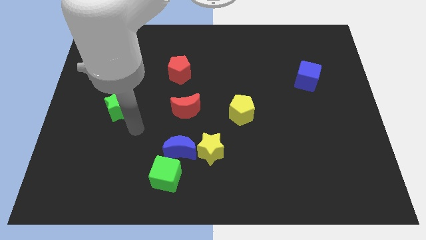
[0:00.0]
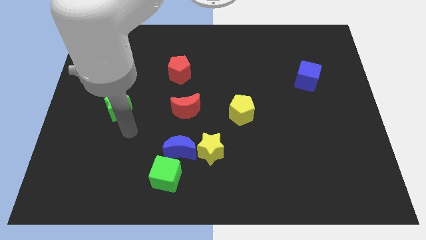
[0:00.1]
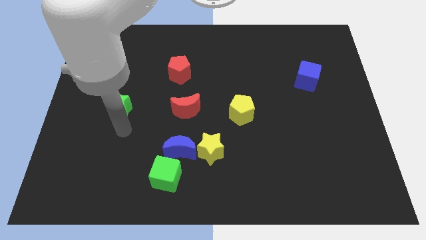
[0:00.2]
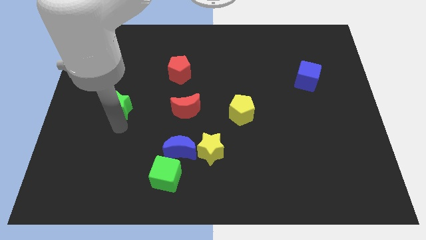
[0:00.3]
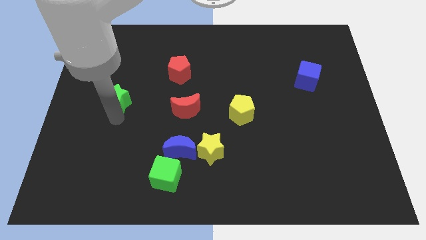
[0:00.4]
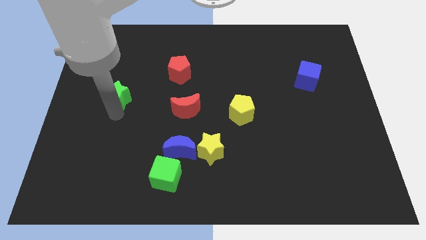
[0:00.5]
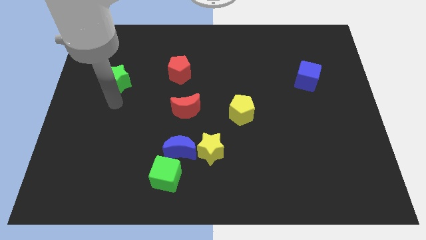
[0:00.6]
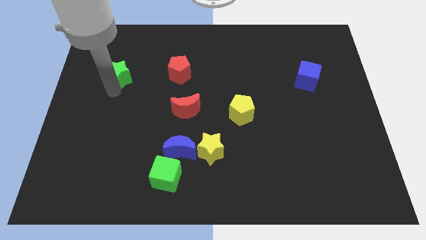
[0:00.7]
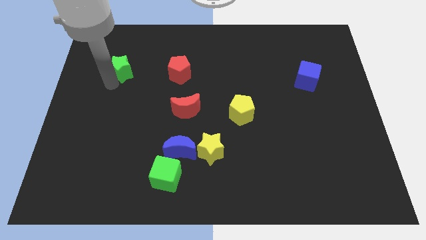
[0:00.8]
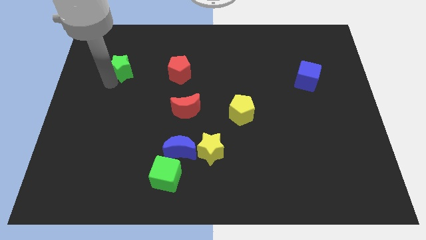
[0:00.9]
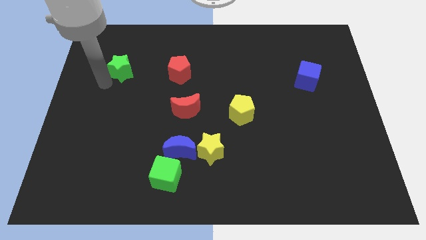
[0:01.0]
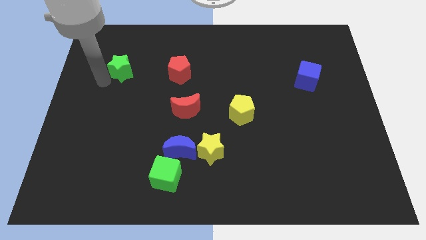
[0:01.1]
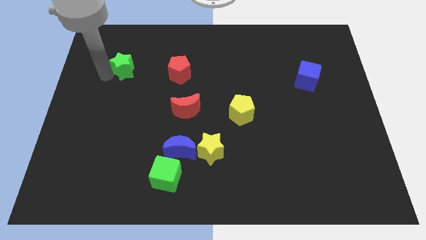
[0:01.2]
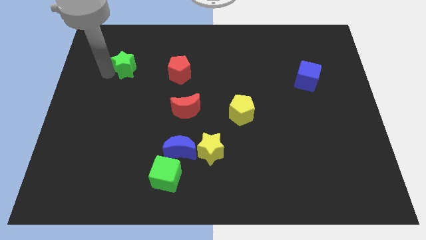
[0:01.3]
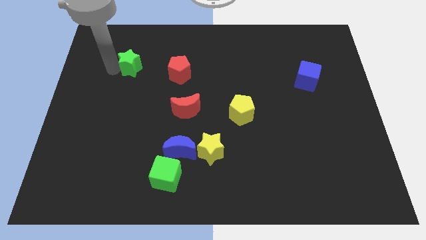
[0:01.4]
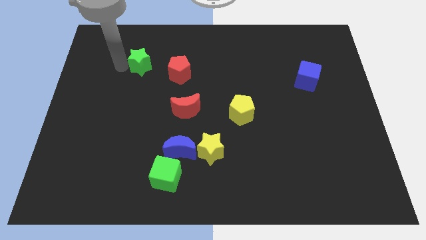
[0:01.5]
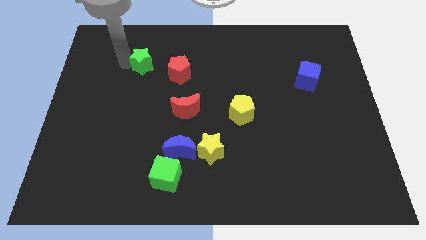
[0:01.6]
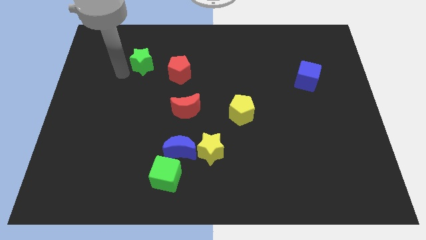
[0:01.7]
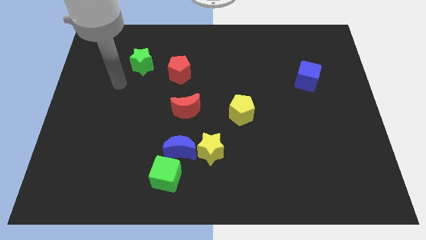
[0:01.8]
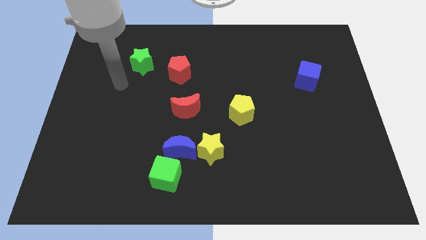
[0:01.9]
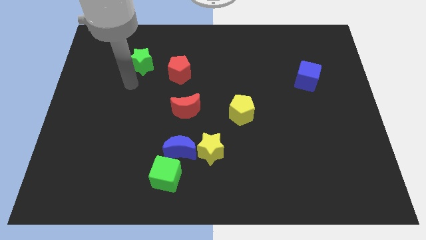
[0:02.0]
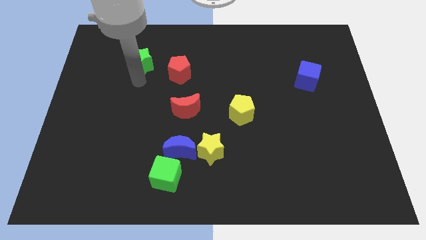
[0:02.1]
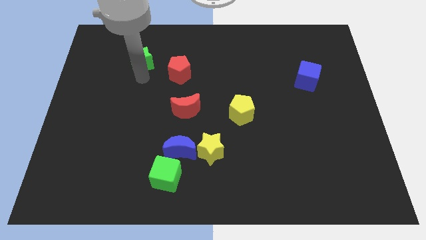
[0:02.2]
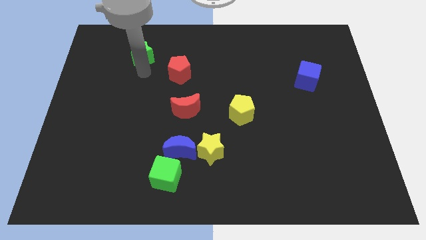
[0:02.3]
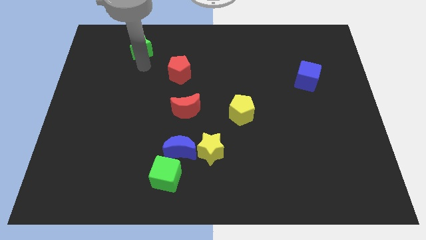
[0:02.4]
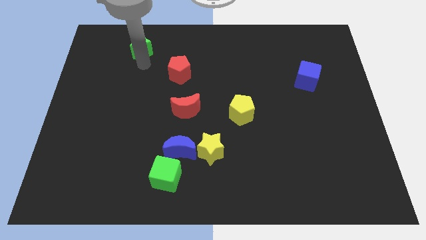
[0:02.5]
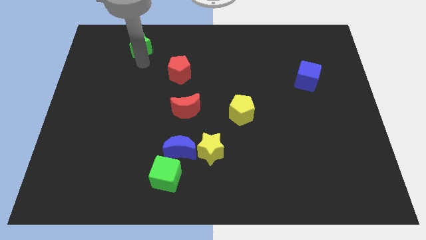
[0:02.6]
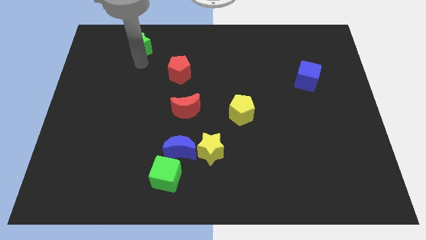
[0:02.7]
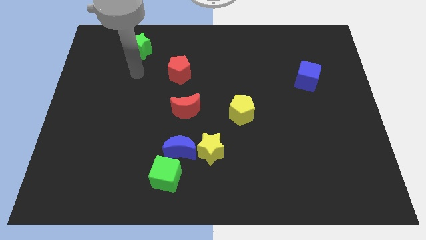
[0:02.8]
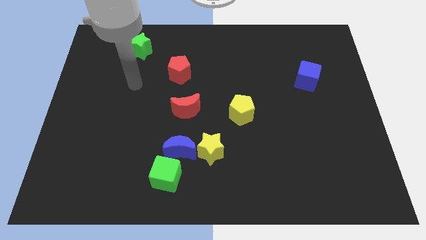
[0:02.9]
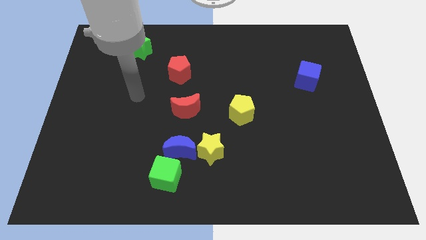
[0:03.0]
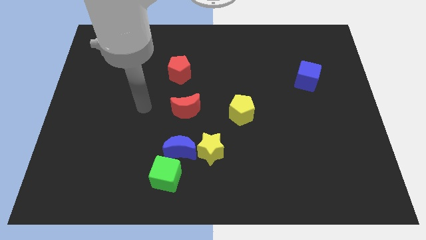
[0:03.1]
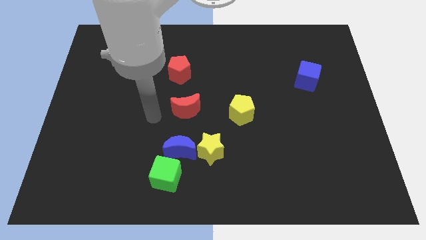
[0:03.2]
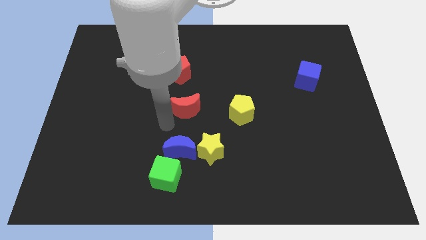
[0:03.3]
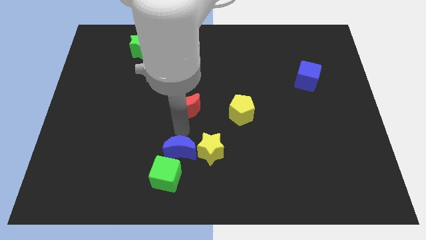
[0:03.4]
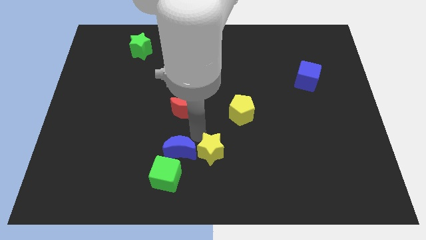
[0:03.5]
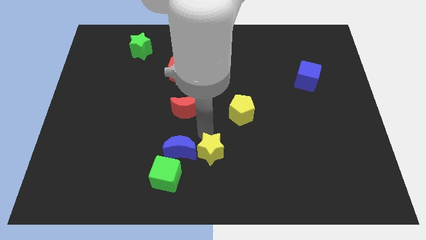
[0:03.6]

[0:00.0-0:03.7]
push the green star towards the top left side of the board

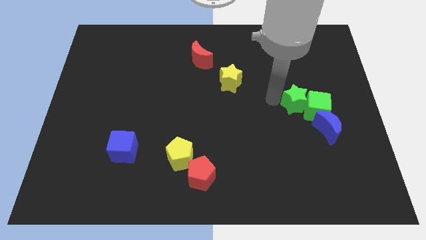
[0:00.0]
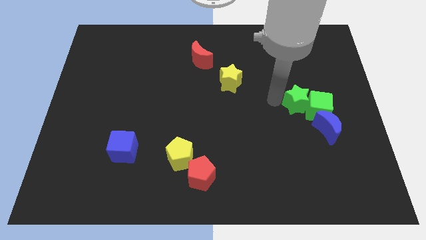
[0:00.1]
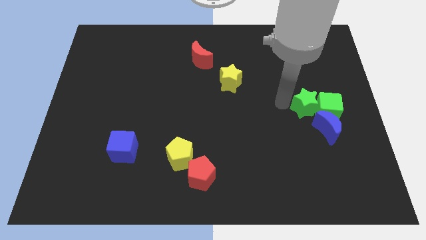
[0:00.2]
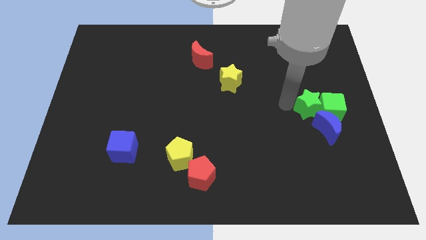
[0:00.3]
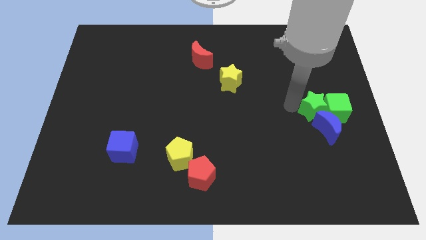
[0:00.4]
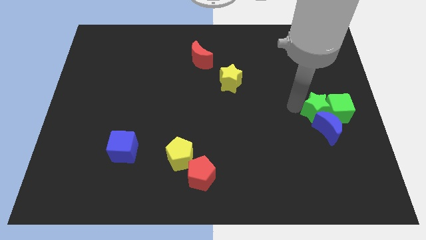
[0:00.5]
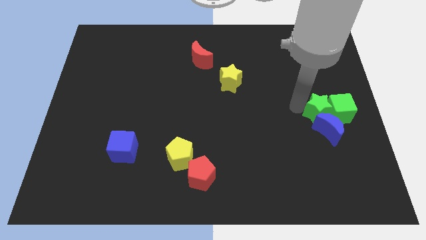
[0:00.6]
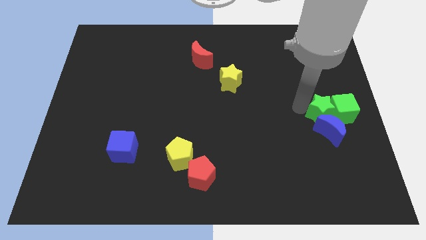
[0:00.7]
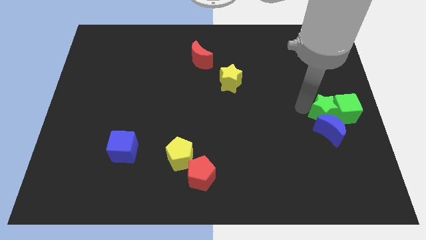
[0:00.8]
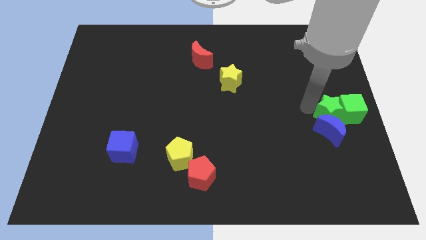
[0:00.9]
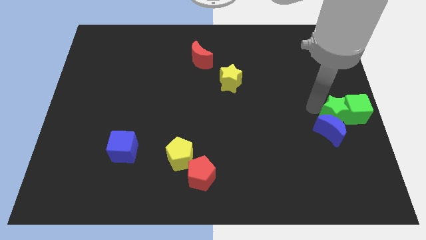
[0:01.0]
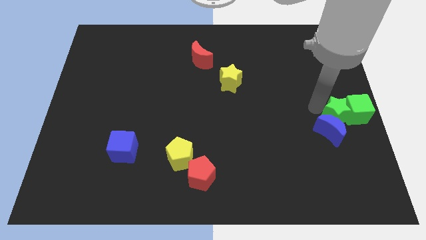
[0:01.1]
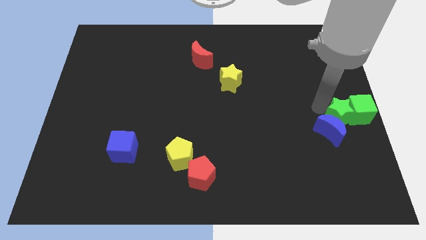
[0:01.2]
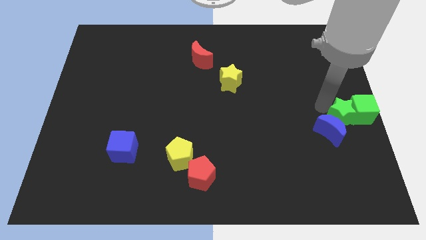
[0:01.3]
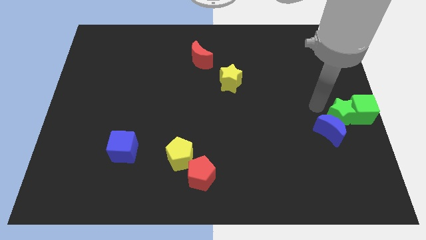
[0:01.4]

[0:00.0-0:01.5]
place the green cube and green star at the center right of the board

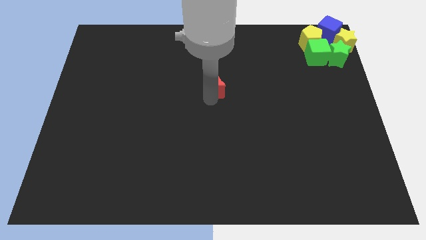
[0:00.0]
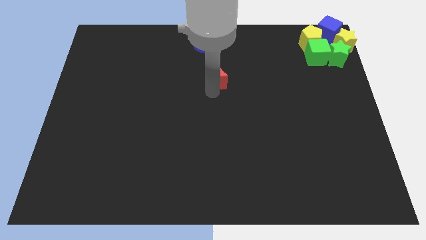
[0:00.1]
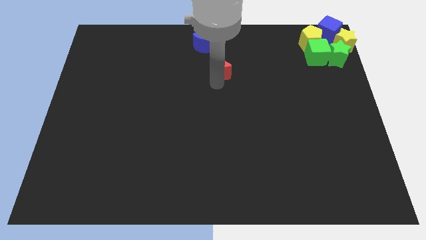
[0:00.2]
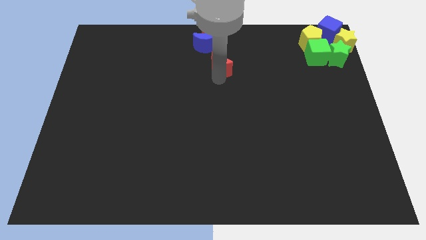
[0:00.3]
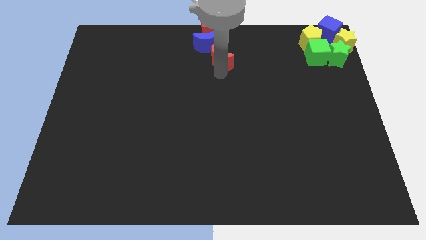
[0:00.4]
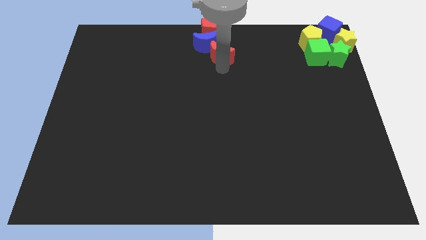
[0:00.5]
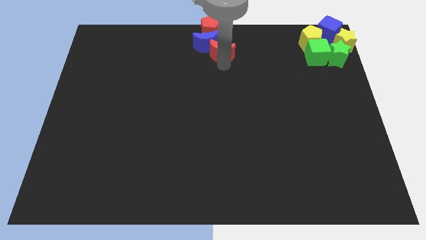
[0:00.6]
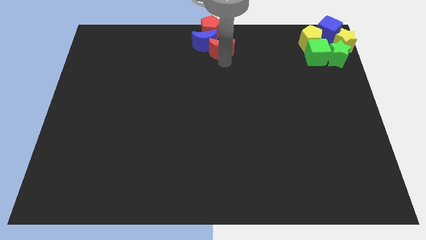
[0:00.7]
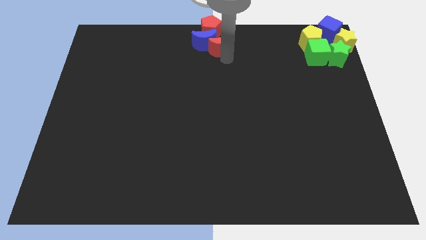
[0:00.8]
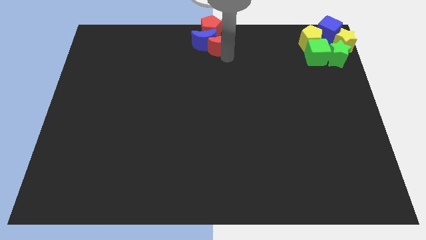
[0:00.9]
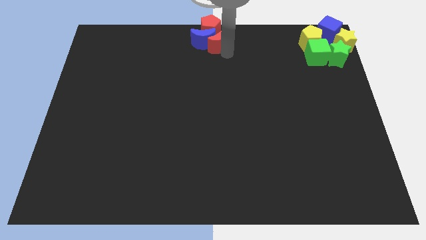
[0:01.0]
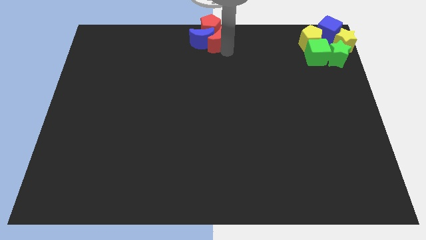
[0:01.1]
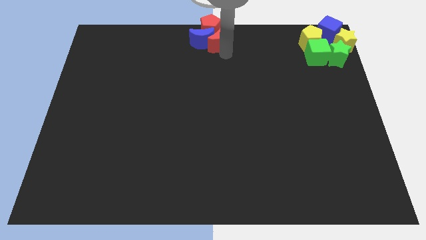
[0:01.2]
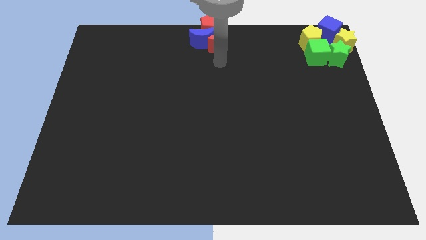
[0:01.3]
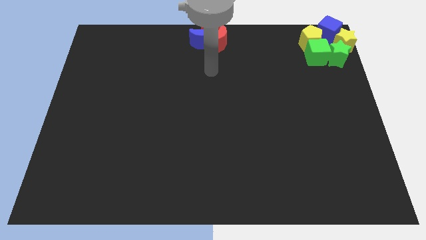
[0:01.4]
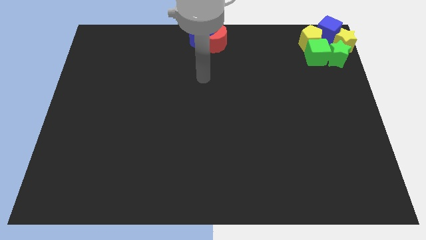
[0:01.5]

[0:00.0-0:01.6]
move the red moon into the blue moon

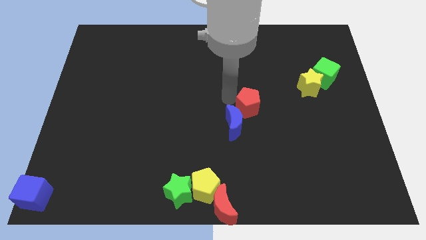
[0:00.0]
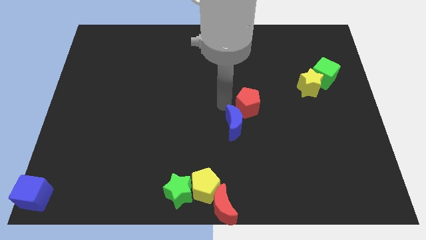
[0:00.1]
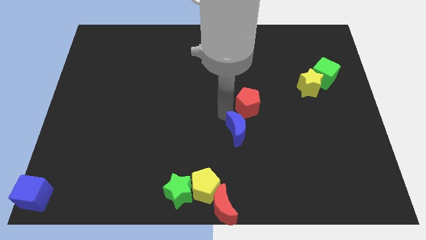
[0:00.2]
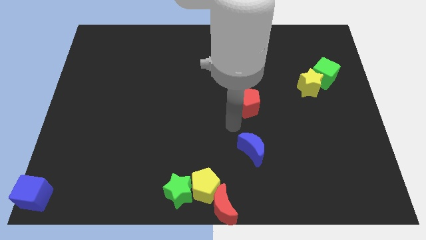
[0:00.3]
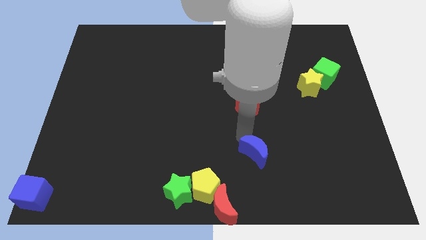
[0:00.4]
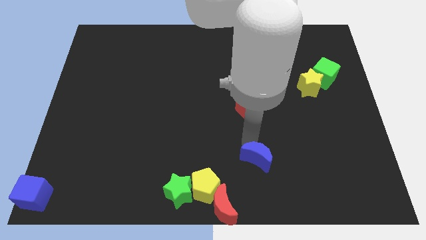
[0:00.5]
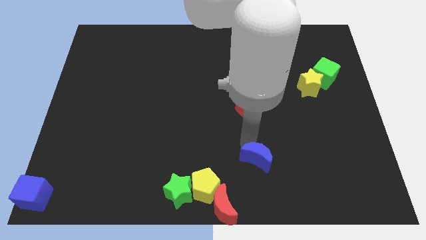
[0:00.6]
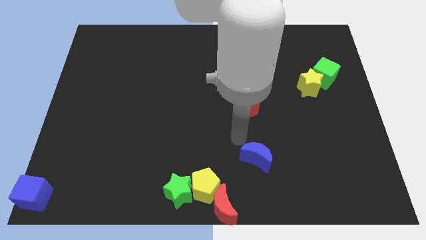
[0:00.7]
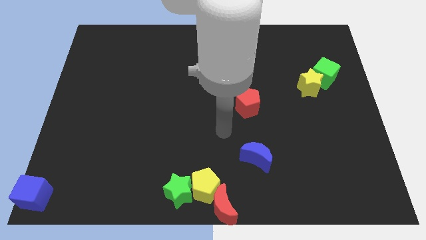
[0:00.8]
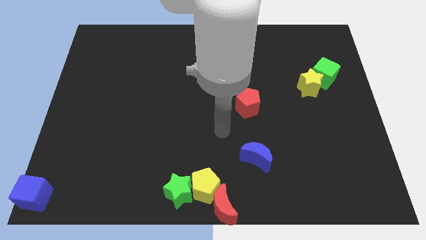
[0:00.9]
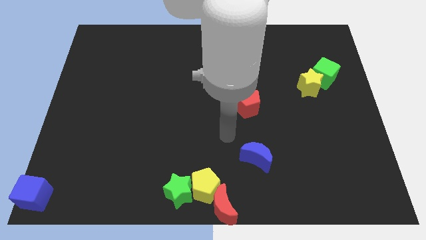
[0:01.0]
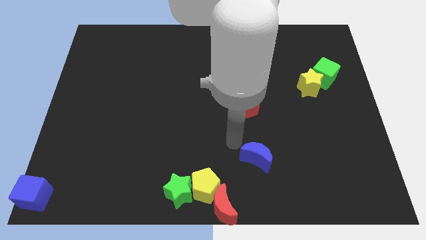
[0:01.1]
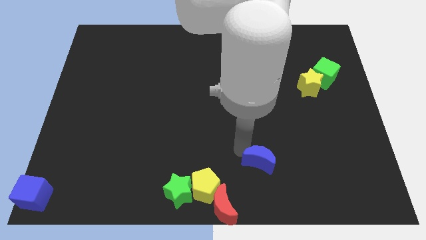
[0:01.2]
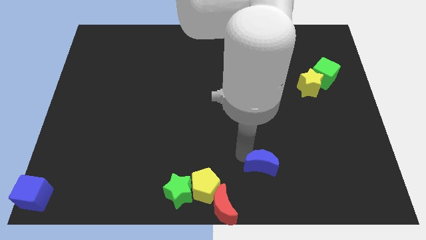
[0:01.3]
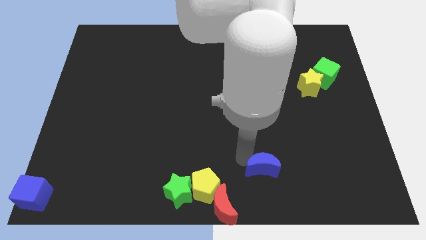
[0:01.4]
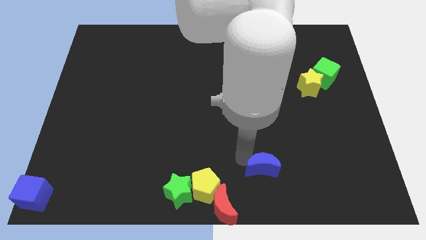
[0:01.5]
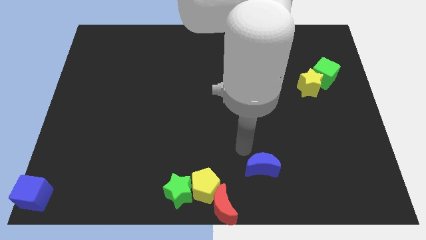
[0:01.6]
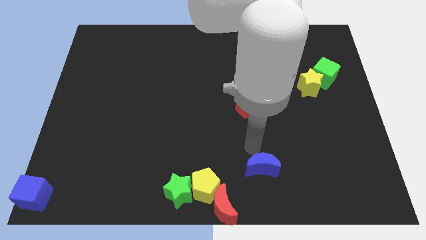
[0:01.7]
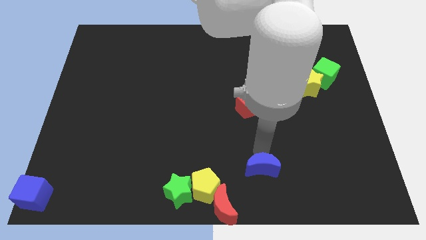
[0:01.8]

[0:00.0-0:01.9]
separate the blue crescent from the red pentagon

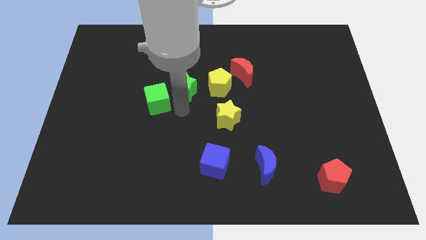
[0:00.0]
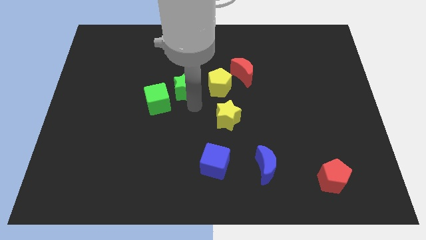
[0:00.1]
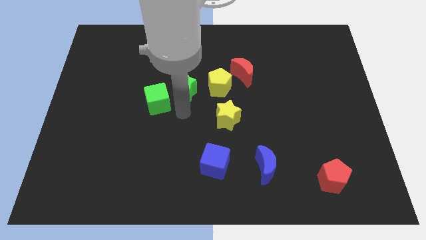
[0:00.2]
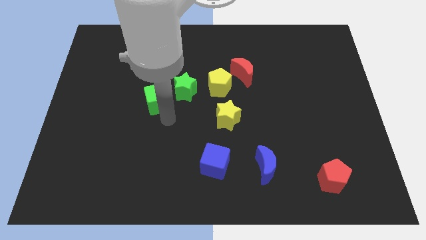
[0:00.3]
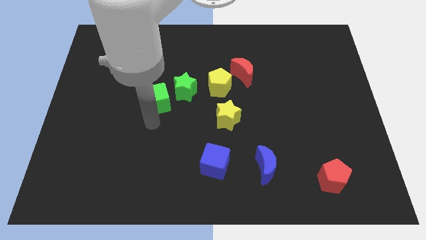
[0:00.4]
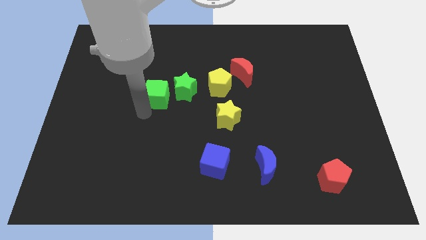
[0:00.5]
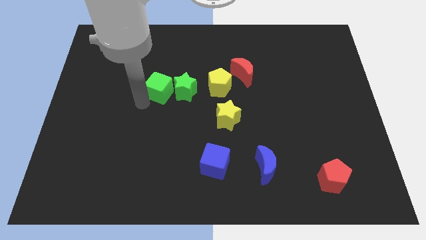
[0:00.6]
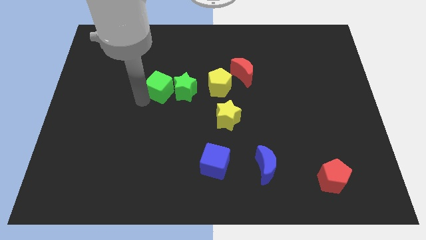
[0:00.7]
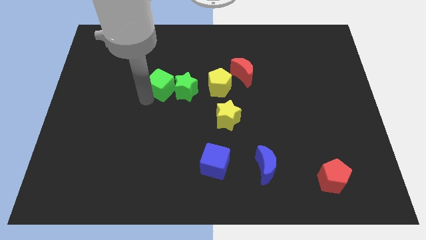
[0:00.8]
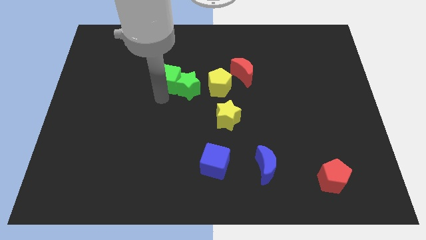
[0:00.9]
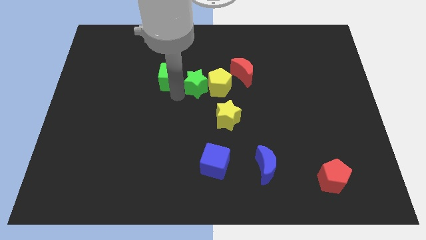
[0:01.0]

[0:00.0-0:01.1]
push the green cube to the left side of the green star
